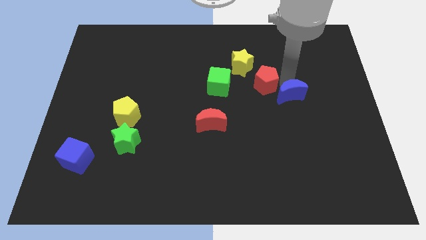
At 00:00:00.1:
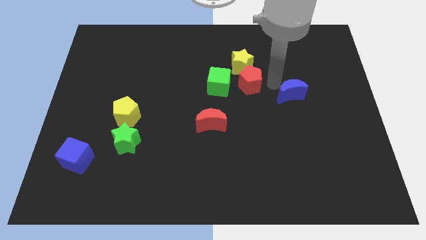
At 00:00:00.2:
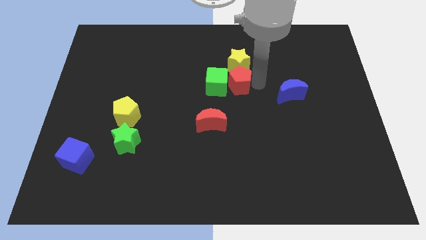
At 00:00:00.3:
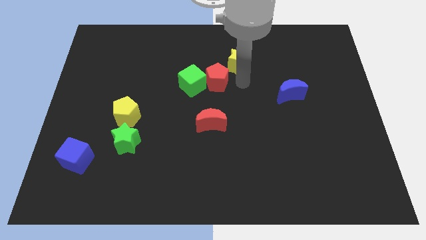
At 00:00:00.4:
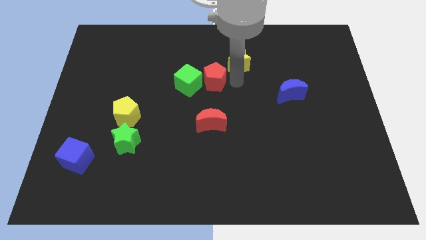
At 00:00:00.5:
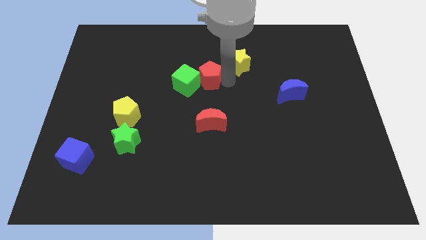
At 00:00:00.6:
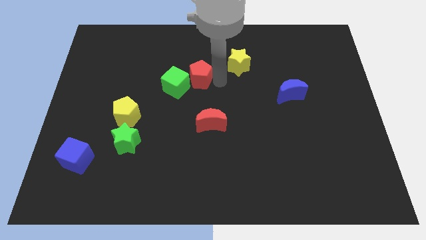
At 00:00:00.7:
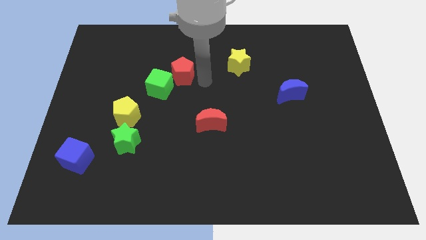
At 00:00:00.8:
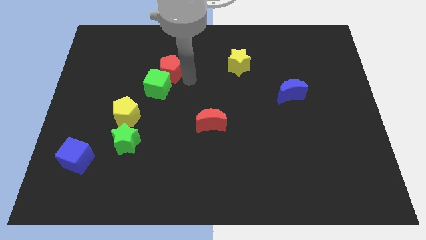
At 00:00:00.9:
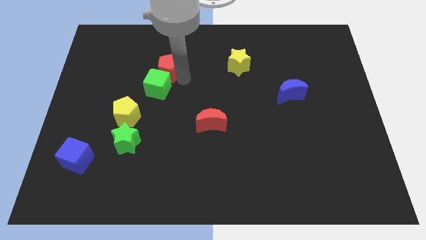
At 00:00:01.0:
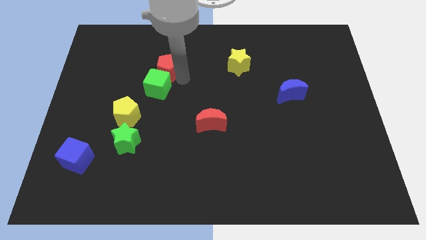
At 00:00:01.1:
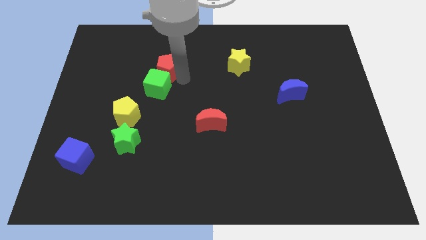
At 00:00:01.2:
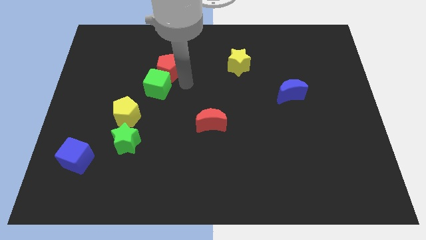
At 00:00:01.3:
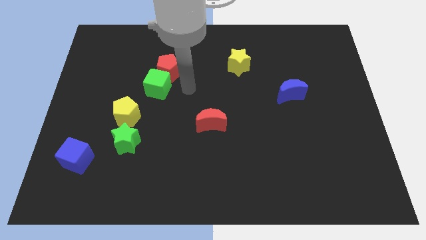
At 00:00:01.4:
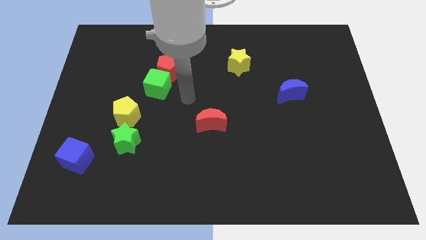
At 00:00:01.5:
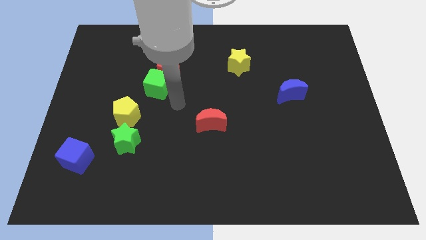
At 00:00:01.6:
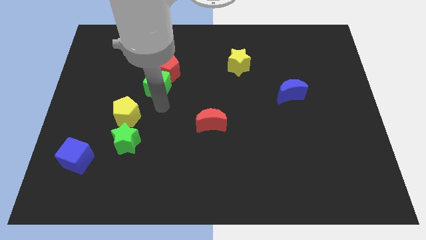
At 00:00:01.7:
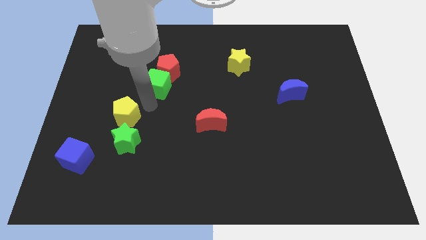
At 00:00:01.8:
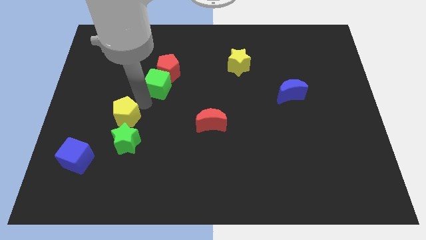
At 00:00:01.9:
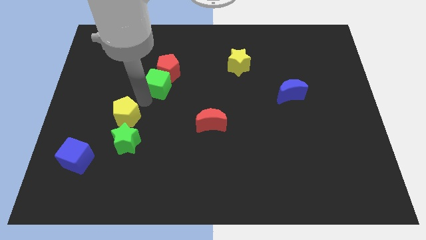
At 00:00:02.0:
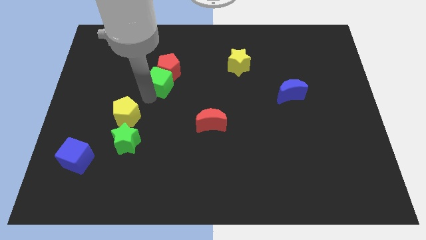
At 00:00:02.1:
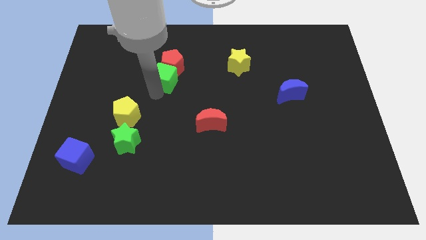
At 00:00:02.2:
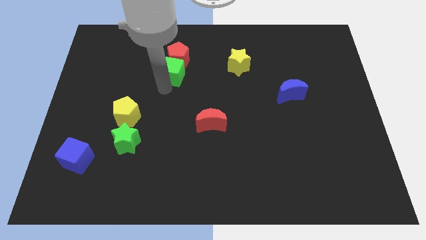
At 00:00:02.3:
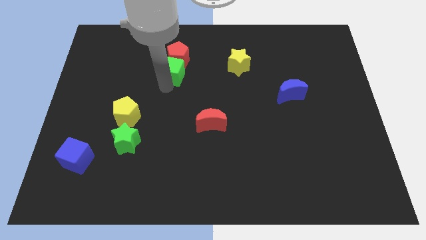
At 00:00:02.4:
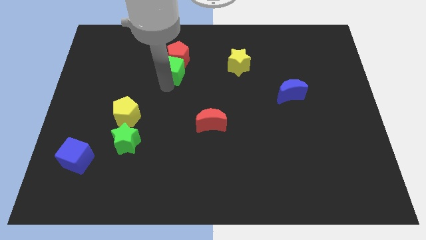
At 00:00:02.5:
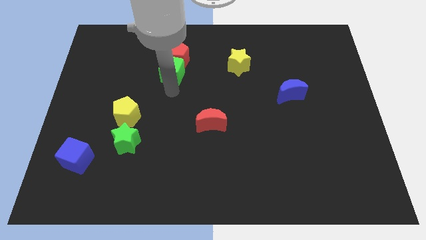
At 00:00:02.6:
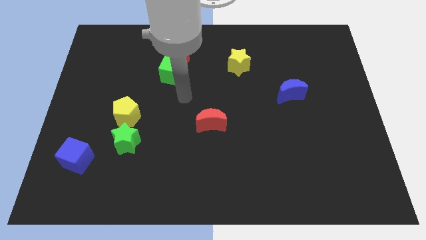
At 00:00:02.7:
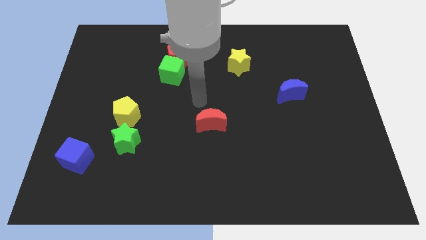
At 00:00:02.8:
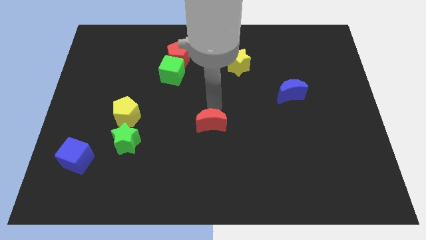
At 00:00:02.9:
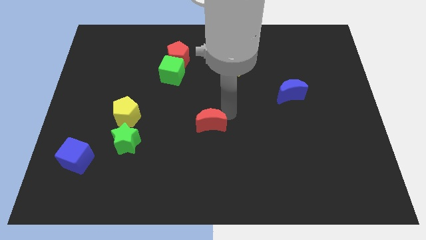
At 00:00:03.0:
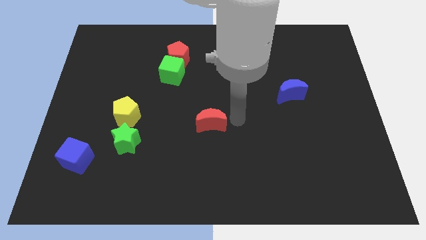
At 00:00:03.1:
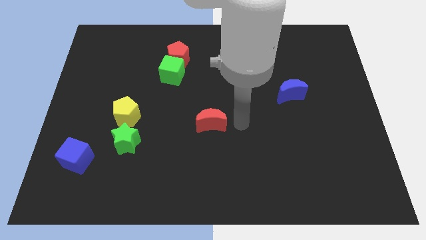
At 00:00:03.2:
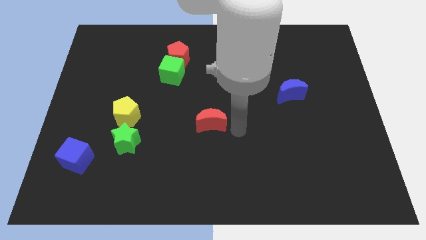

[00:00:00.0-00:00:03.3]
place the green cube and red pentagon horizontally to the left side of the yellow star

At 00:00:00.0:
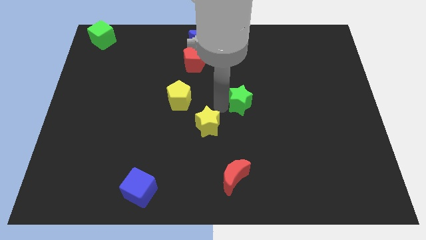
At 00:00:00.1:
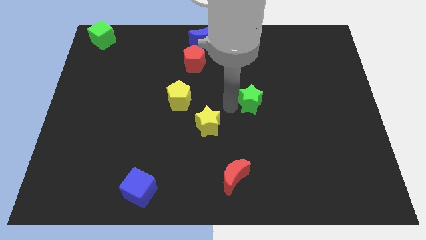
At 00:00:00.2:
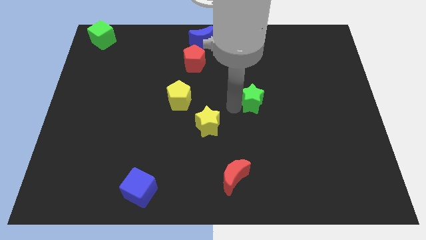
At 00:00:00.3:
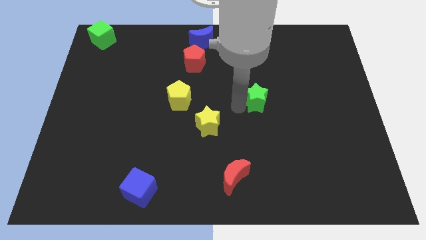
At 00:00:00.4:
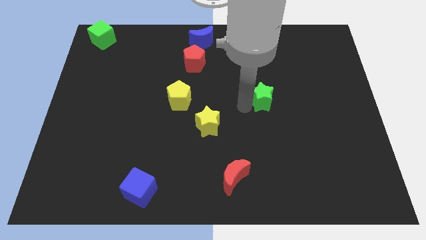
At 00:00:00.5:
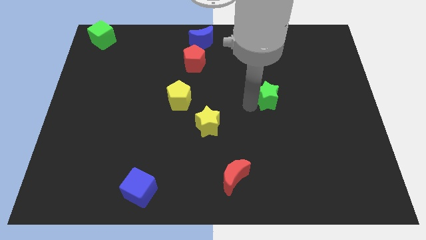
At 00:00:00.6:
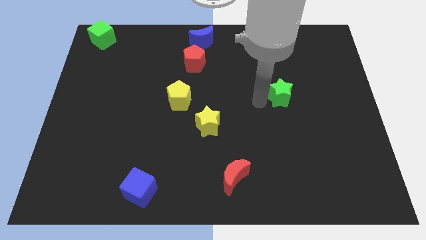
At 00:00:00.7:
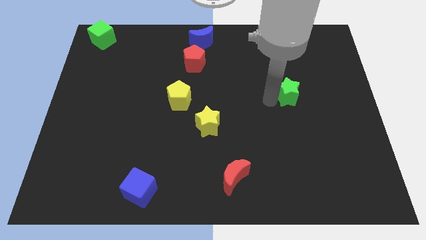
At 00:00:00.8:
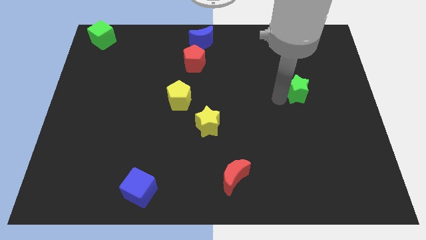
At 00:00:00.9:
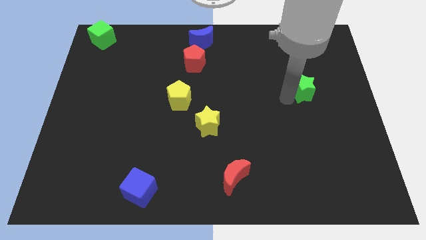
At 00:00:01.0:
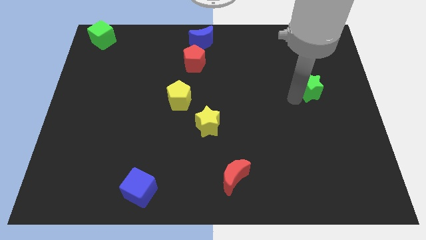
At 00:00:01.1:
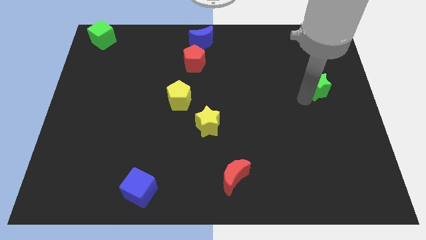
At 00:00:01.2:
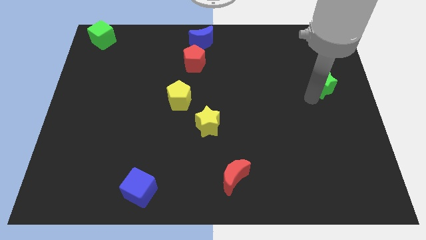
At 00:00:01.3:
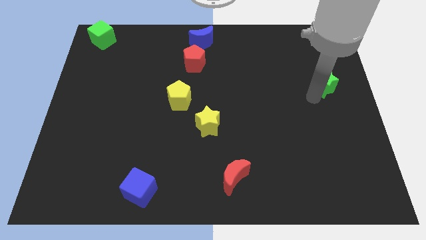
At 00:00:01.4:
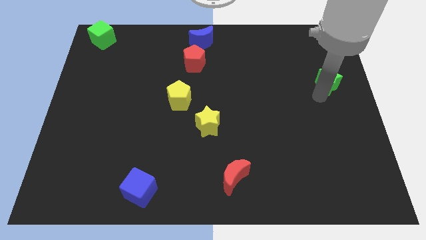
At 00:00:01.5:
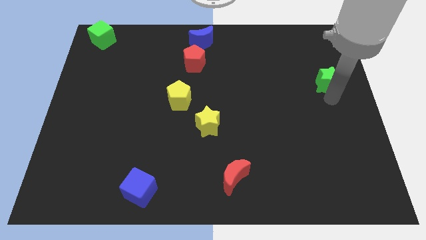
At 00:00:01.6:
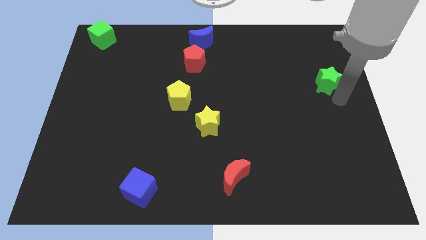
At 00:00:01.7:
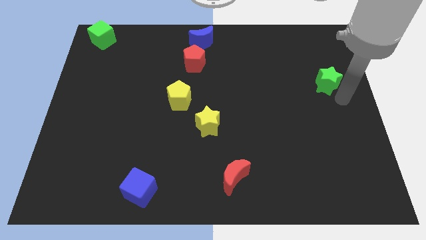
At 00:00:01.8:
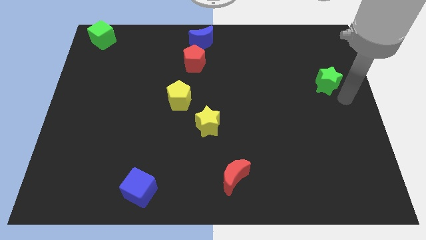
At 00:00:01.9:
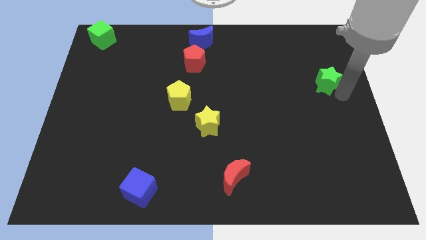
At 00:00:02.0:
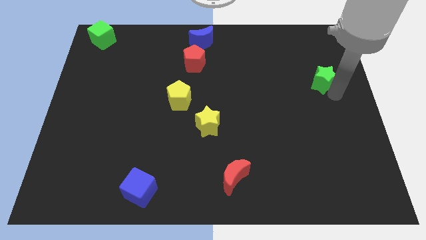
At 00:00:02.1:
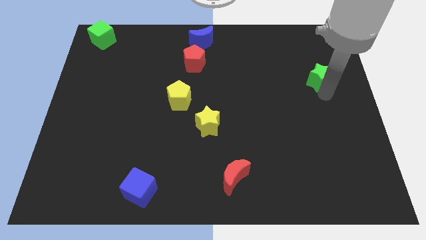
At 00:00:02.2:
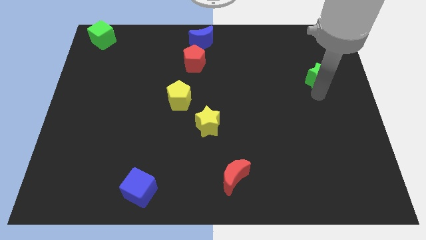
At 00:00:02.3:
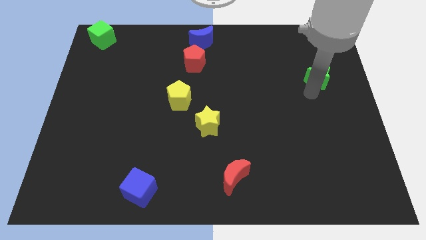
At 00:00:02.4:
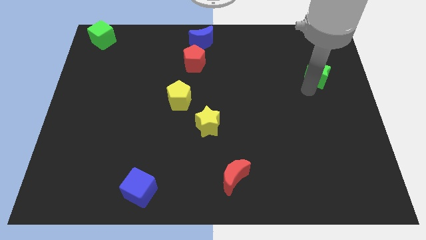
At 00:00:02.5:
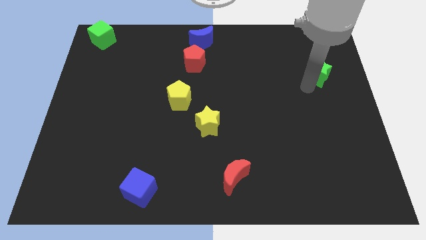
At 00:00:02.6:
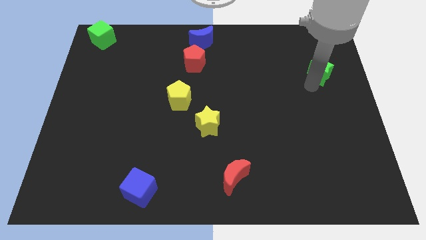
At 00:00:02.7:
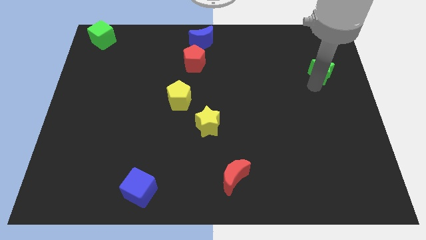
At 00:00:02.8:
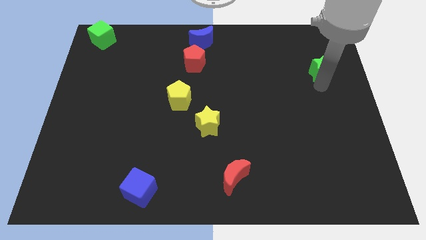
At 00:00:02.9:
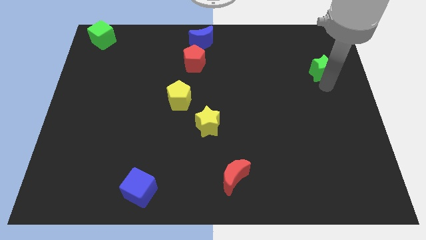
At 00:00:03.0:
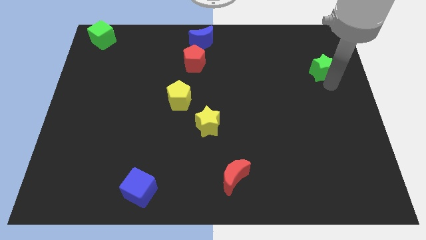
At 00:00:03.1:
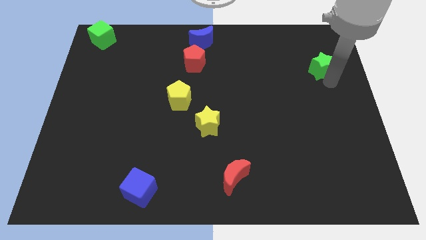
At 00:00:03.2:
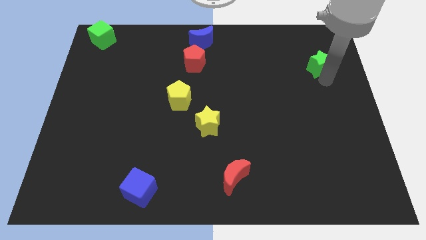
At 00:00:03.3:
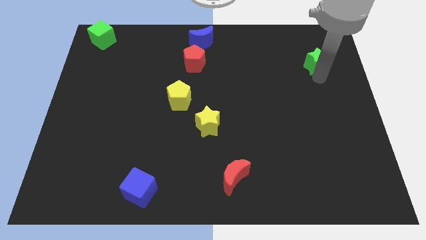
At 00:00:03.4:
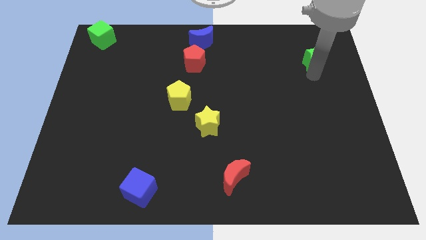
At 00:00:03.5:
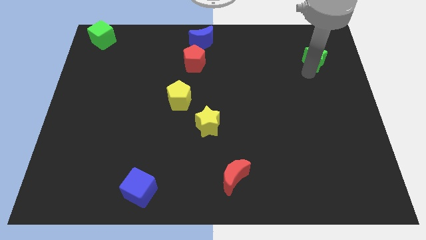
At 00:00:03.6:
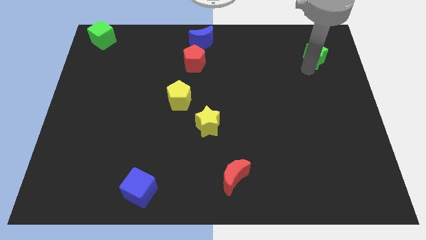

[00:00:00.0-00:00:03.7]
move the green star towards the top right

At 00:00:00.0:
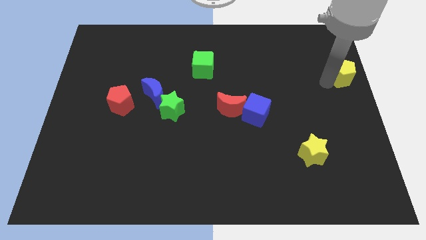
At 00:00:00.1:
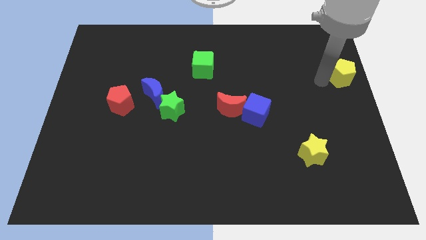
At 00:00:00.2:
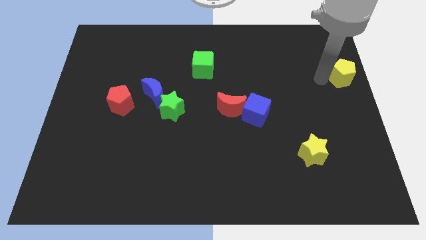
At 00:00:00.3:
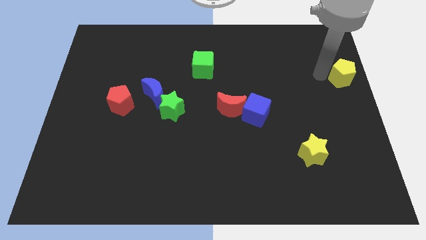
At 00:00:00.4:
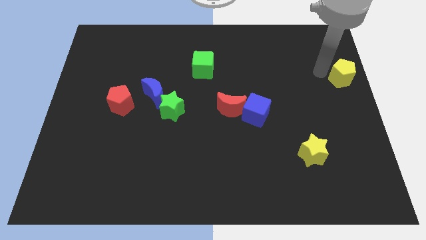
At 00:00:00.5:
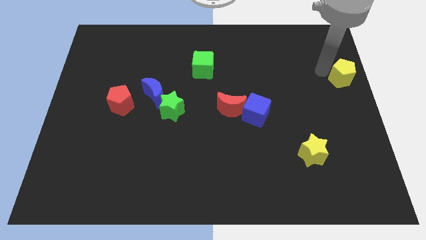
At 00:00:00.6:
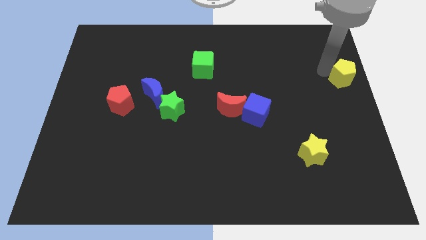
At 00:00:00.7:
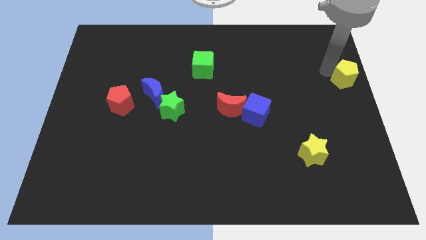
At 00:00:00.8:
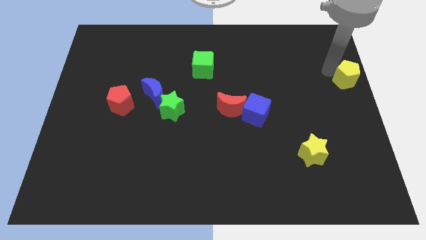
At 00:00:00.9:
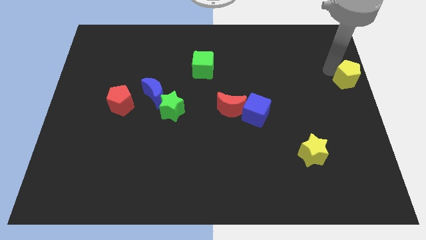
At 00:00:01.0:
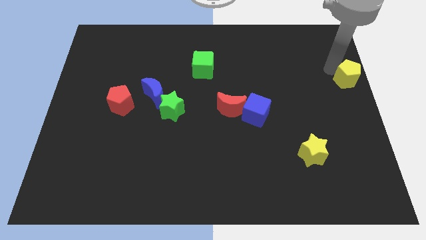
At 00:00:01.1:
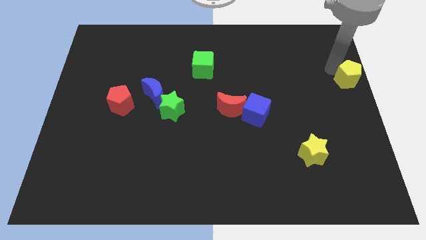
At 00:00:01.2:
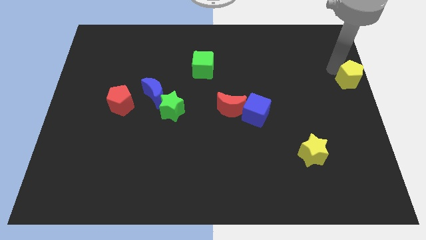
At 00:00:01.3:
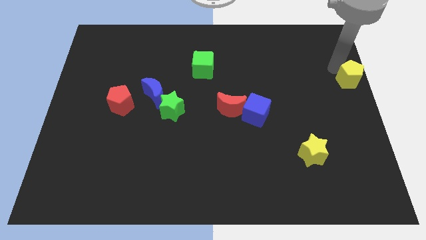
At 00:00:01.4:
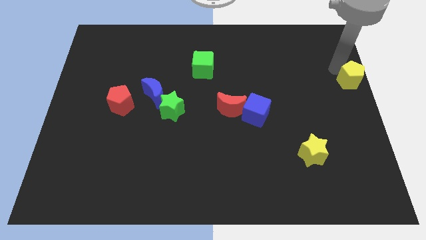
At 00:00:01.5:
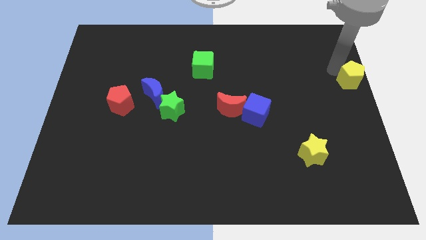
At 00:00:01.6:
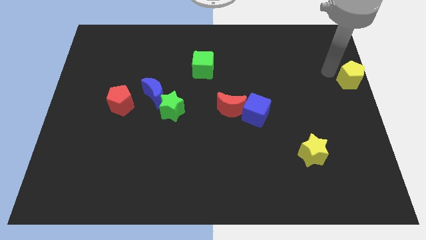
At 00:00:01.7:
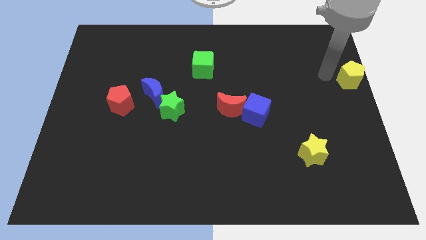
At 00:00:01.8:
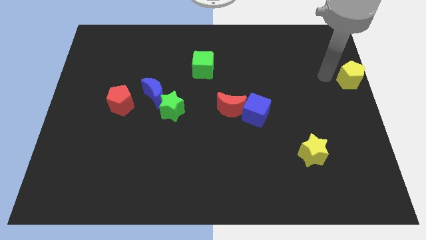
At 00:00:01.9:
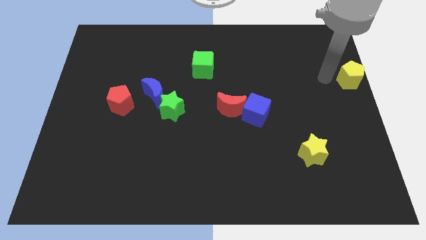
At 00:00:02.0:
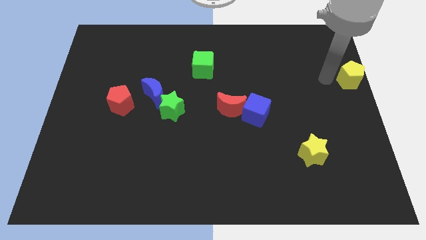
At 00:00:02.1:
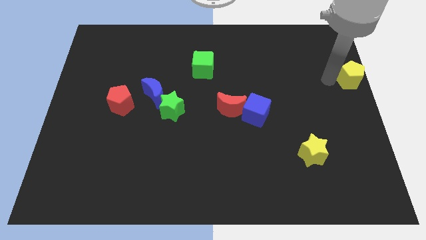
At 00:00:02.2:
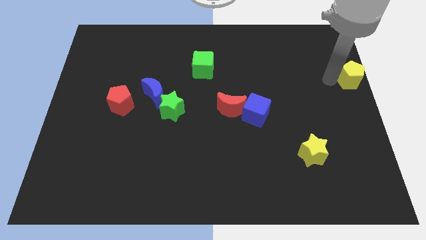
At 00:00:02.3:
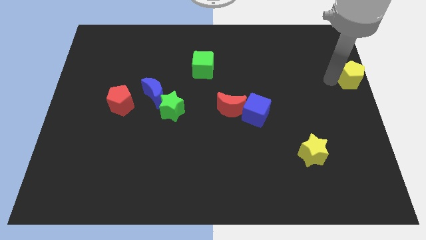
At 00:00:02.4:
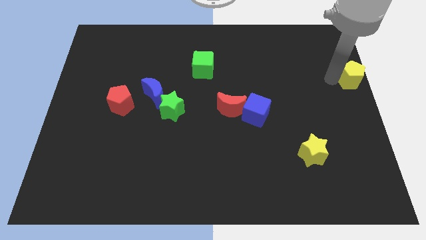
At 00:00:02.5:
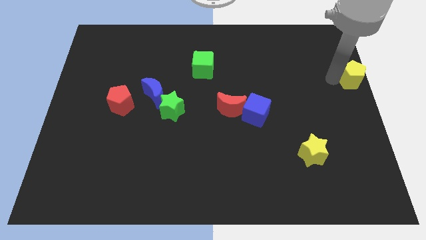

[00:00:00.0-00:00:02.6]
place yellow block on the irght side of the board
